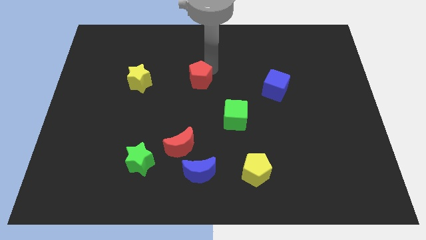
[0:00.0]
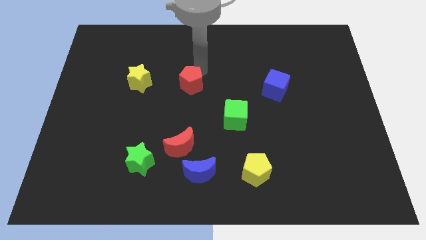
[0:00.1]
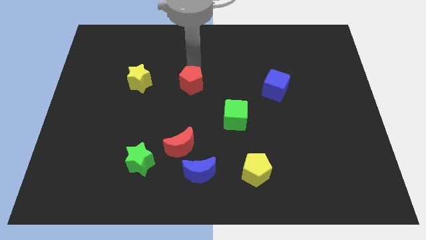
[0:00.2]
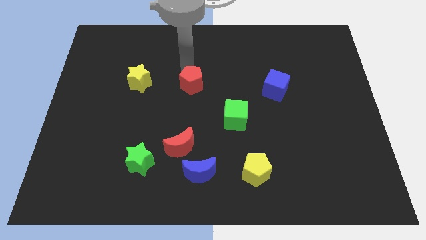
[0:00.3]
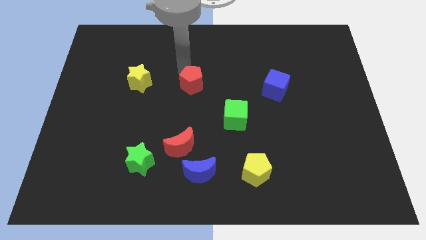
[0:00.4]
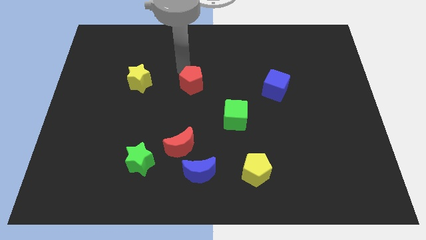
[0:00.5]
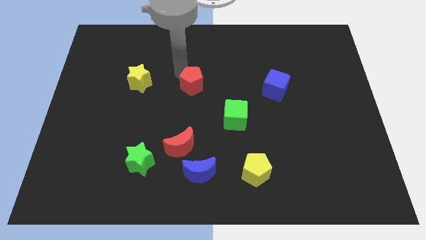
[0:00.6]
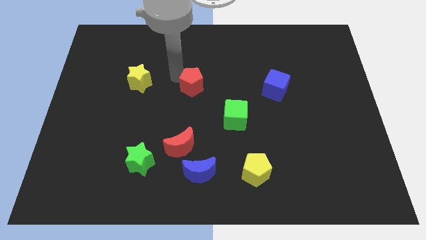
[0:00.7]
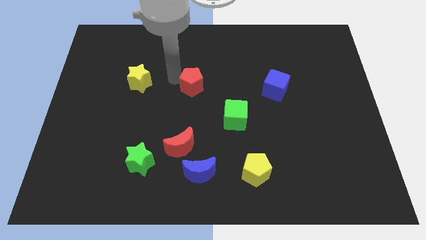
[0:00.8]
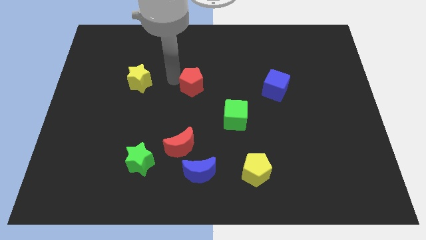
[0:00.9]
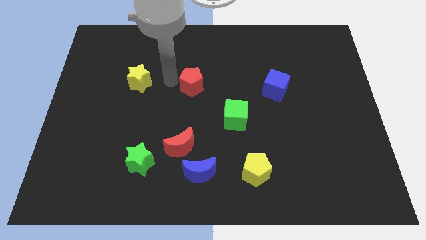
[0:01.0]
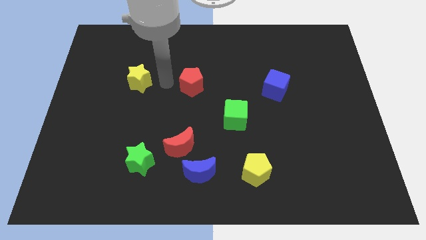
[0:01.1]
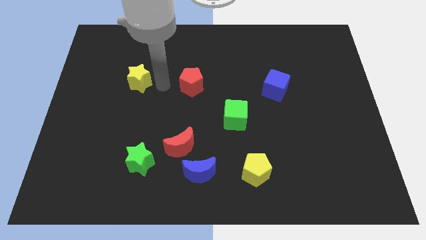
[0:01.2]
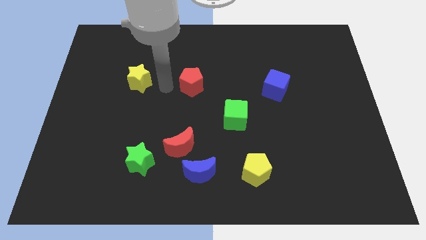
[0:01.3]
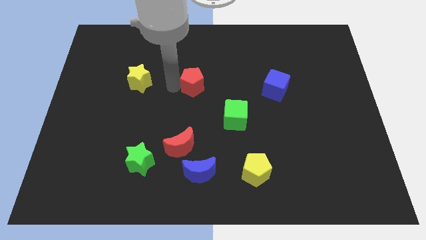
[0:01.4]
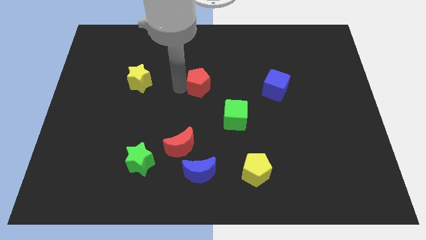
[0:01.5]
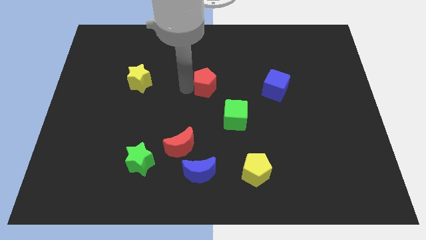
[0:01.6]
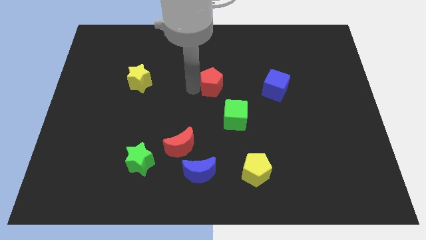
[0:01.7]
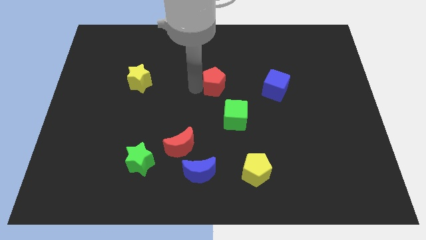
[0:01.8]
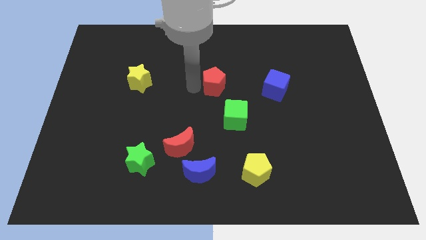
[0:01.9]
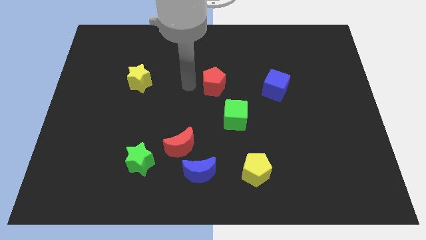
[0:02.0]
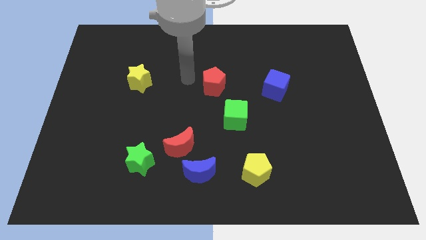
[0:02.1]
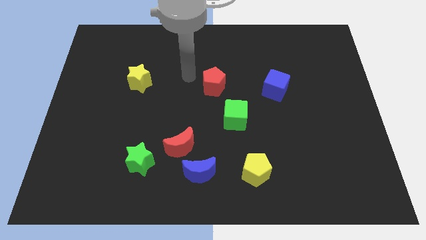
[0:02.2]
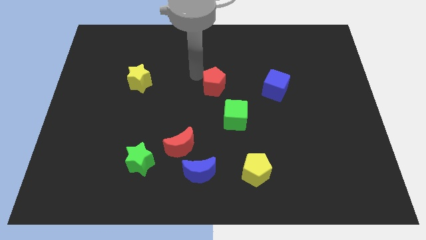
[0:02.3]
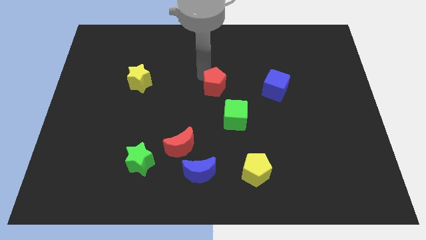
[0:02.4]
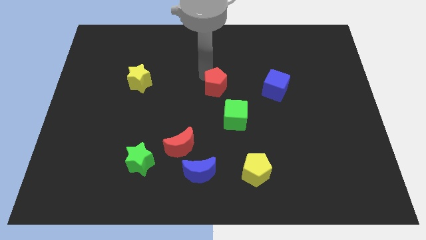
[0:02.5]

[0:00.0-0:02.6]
push red pentagon above green cube

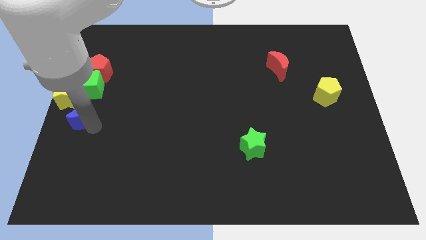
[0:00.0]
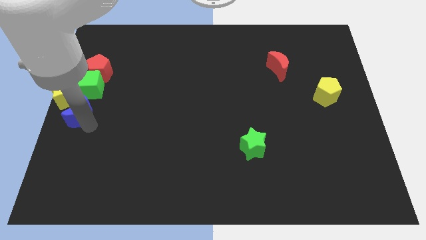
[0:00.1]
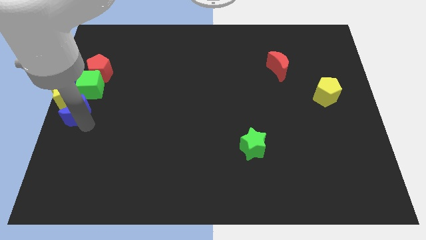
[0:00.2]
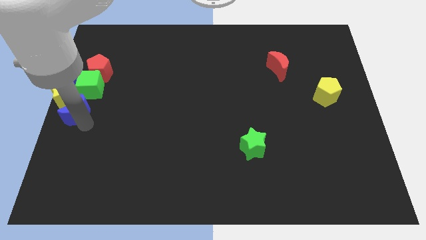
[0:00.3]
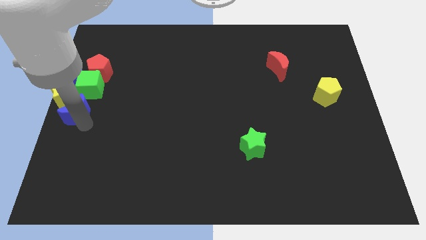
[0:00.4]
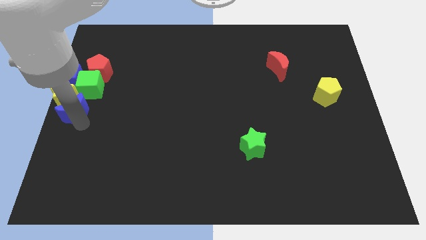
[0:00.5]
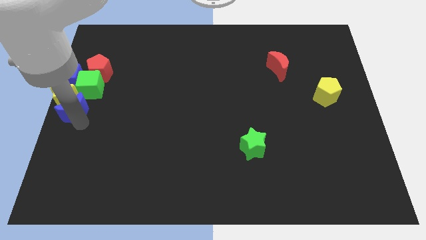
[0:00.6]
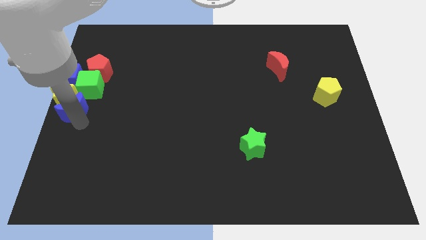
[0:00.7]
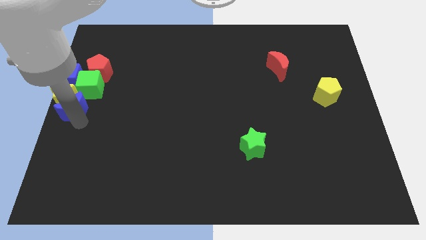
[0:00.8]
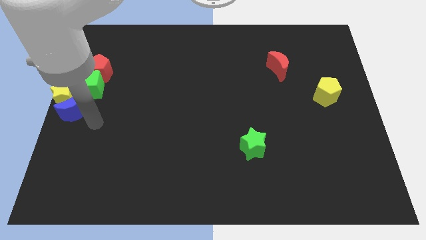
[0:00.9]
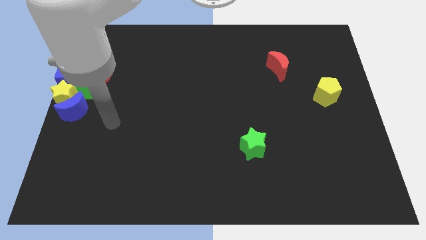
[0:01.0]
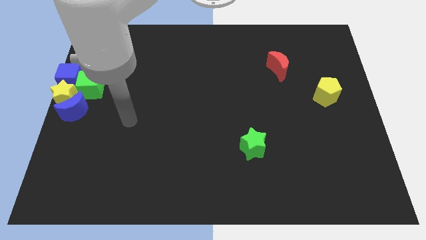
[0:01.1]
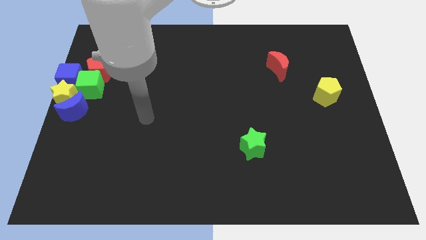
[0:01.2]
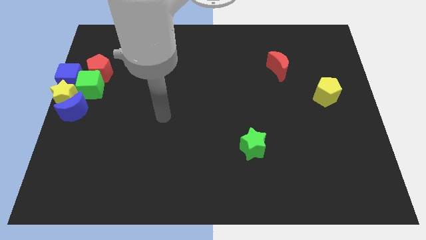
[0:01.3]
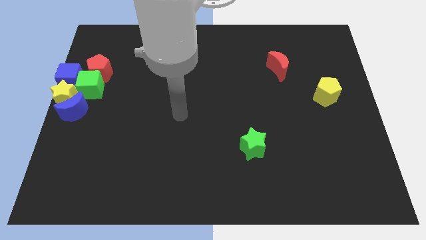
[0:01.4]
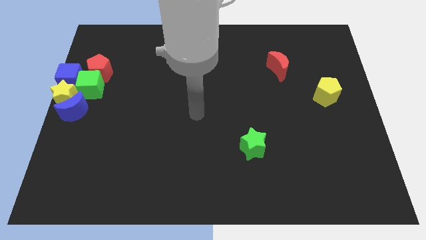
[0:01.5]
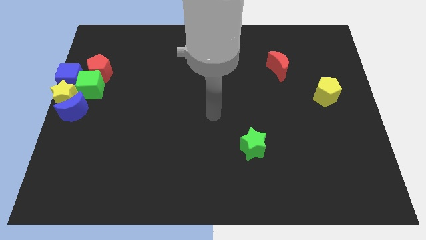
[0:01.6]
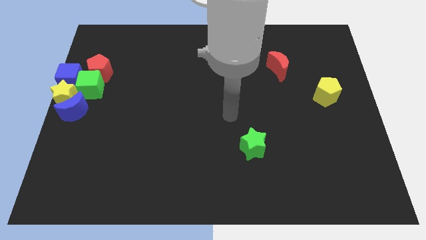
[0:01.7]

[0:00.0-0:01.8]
push the blue crescent to the bottom of the yellow star

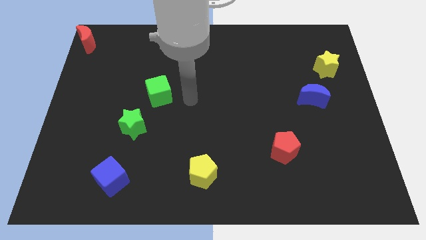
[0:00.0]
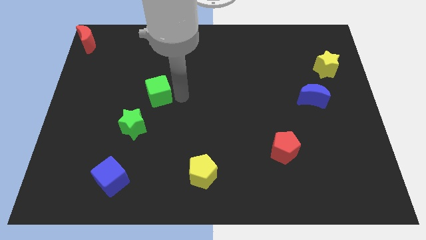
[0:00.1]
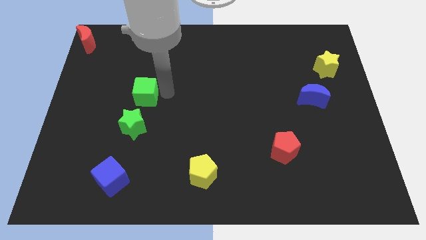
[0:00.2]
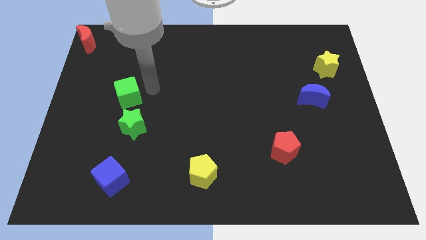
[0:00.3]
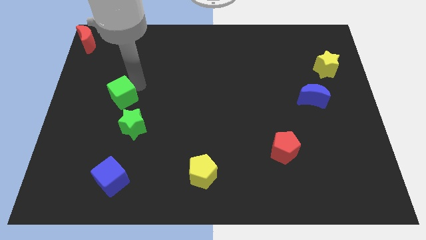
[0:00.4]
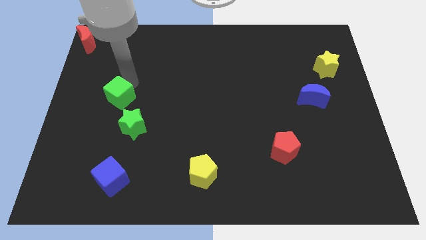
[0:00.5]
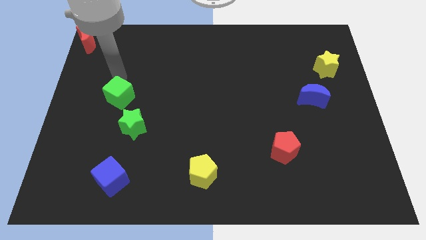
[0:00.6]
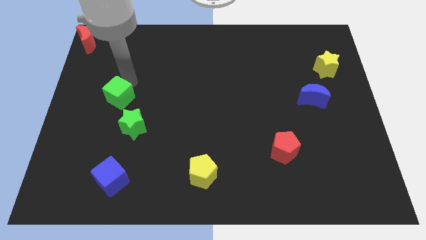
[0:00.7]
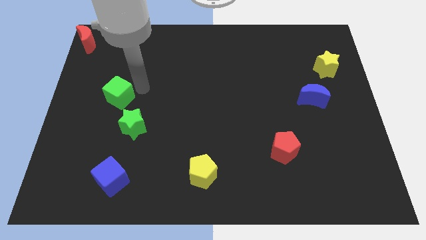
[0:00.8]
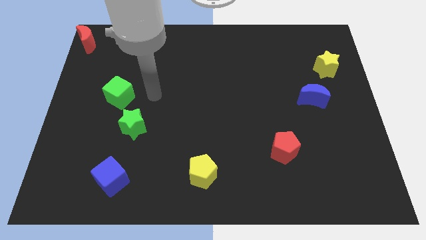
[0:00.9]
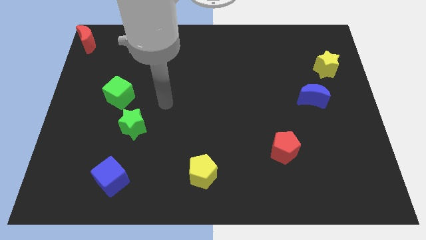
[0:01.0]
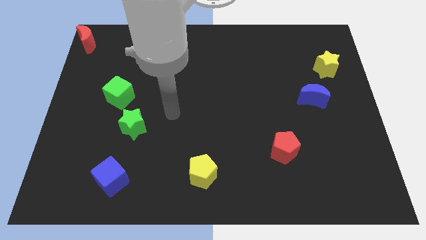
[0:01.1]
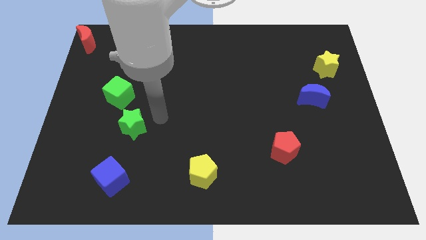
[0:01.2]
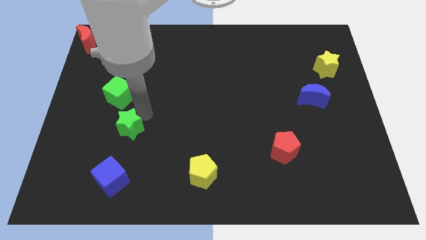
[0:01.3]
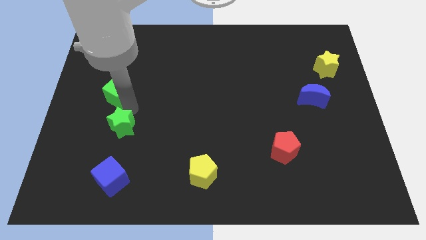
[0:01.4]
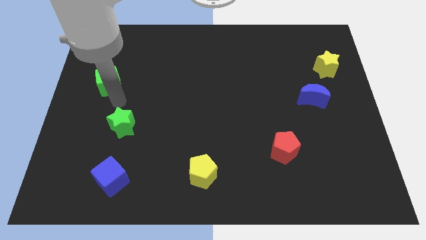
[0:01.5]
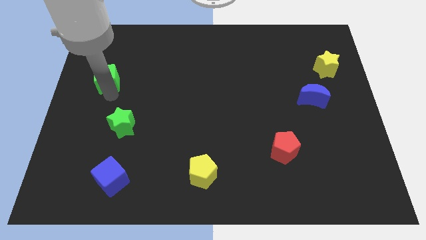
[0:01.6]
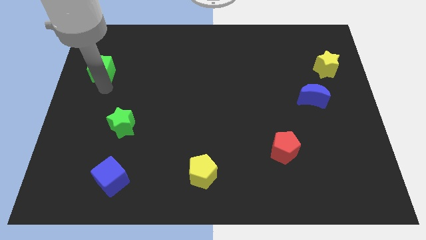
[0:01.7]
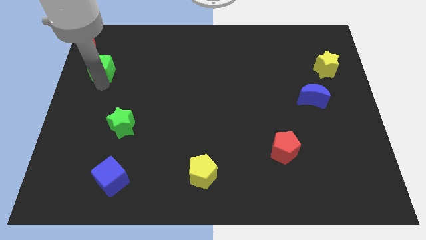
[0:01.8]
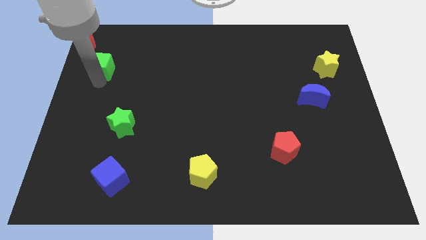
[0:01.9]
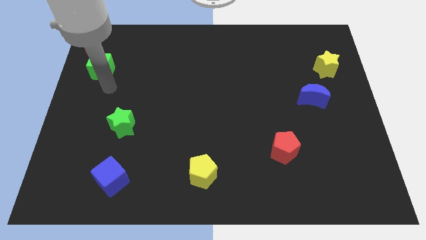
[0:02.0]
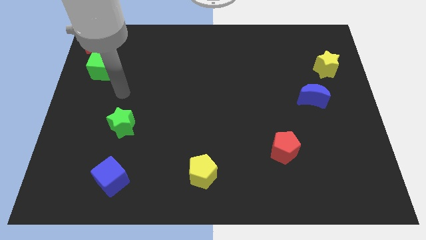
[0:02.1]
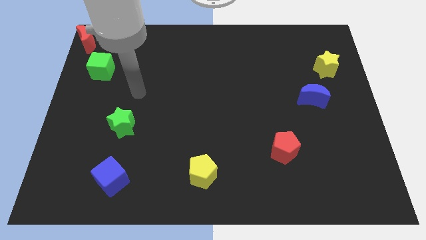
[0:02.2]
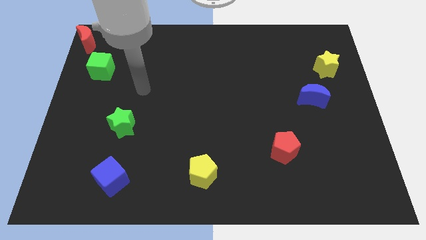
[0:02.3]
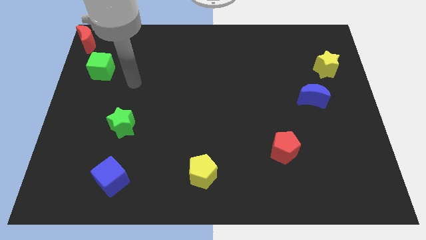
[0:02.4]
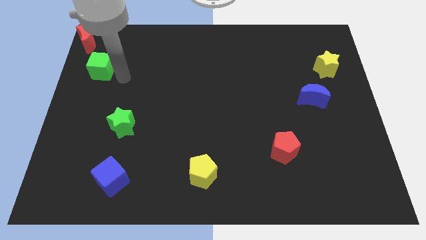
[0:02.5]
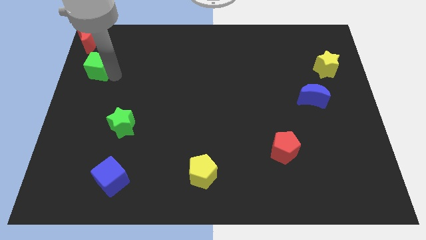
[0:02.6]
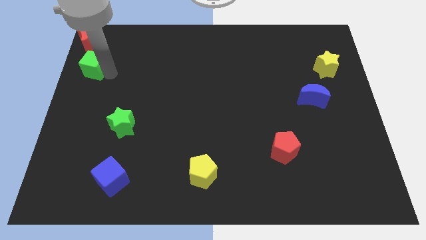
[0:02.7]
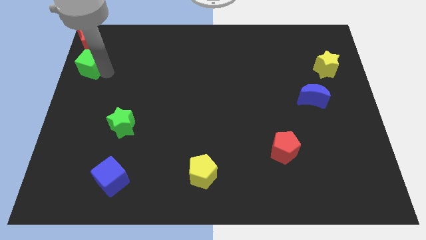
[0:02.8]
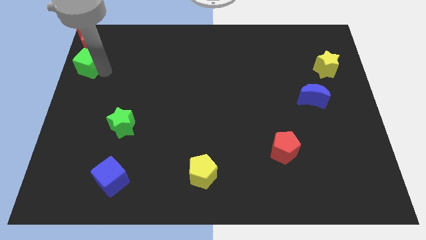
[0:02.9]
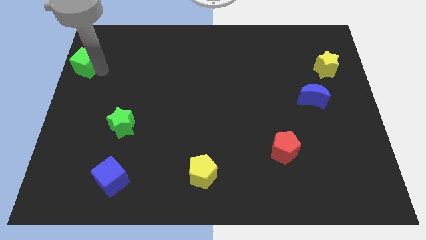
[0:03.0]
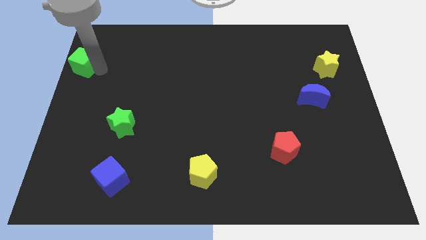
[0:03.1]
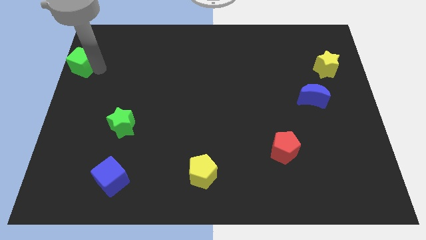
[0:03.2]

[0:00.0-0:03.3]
push the green cube to the bottom of the red crescent

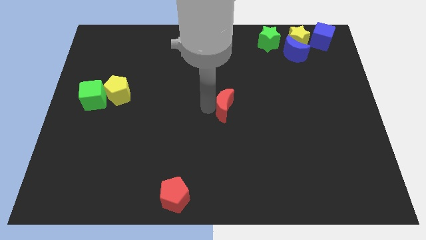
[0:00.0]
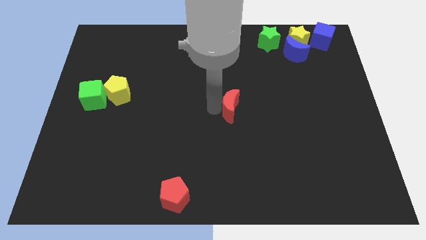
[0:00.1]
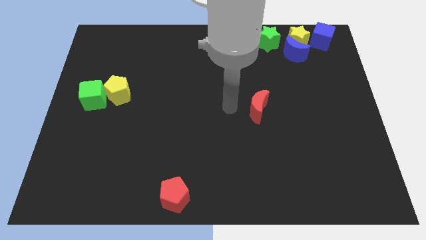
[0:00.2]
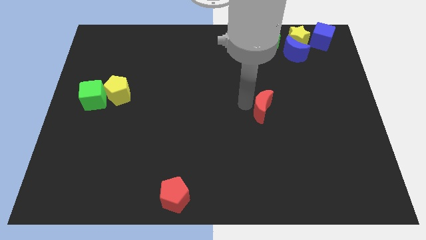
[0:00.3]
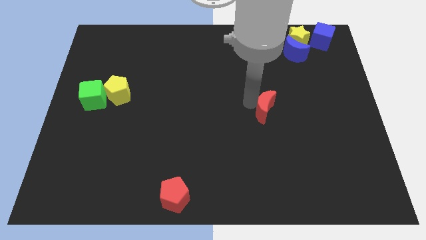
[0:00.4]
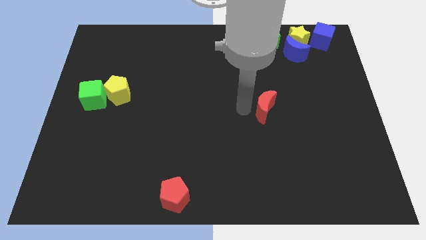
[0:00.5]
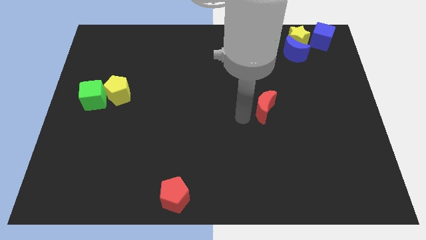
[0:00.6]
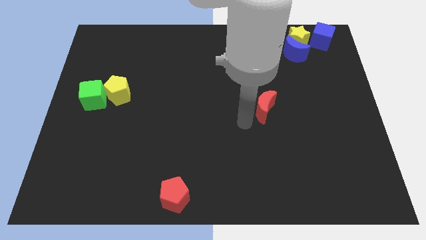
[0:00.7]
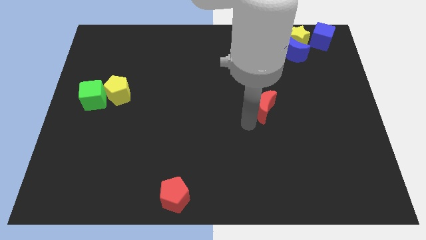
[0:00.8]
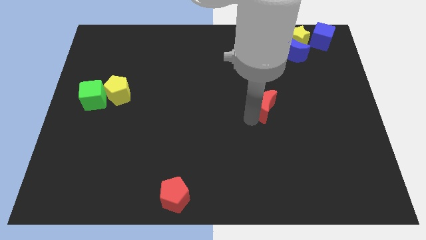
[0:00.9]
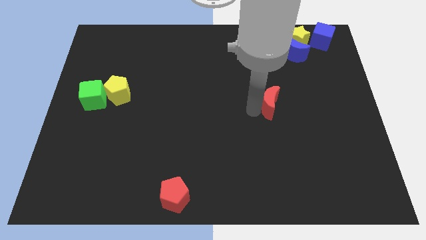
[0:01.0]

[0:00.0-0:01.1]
push red crescent below green star
